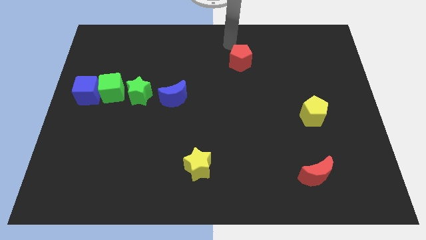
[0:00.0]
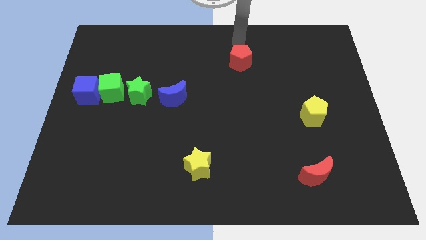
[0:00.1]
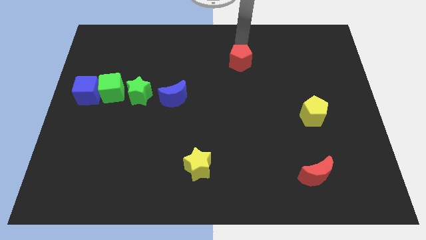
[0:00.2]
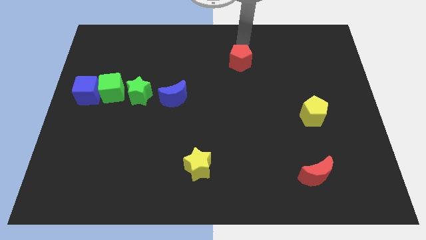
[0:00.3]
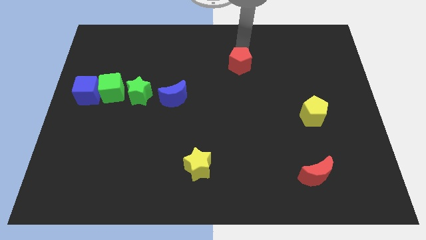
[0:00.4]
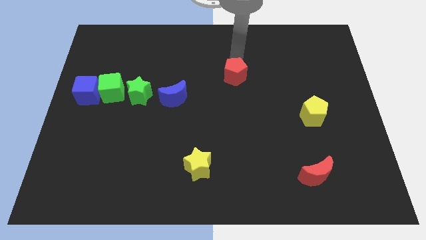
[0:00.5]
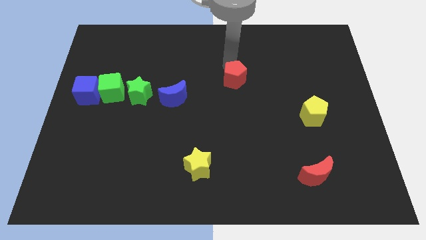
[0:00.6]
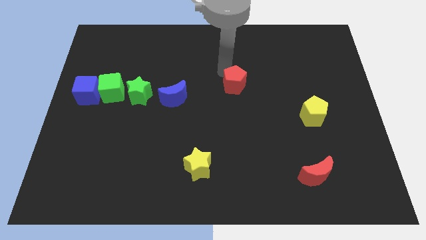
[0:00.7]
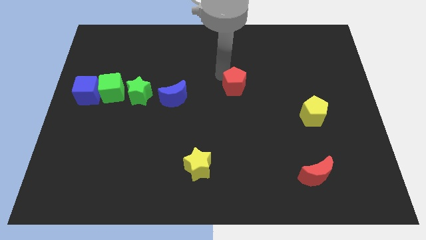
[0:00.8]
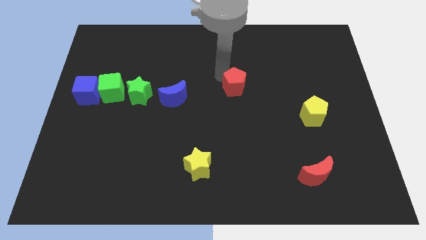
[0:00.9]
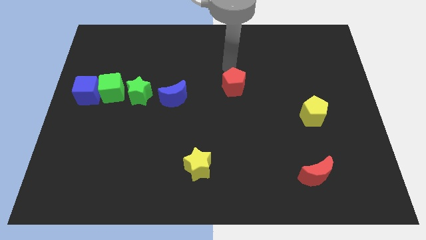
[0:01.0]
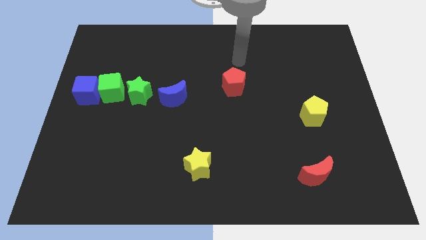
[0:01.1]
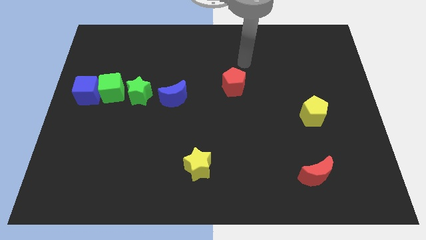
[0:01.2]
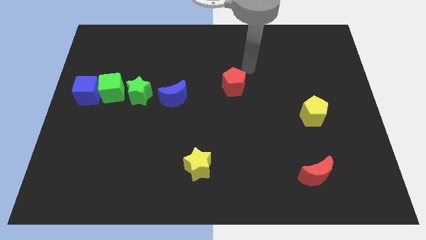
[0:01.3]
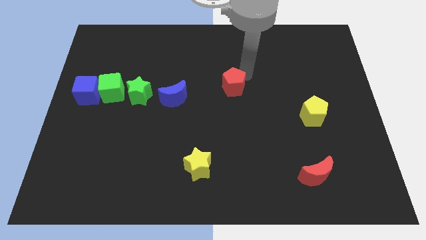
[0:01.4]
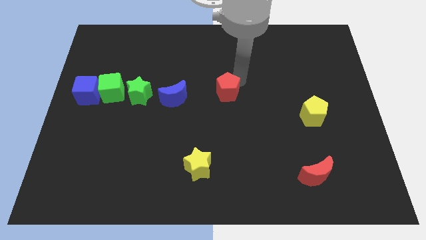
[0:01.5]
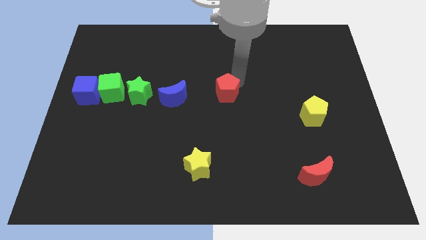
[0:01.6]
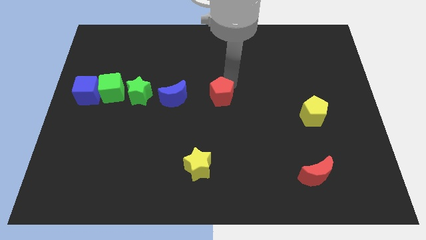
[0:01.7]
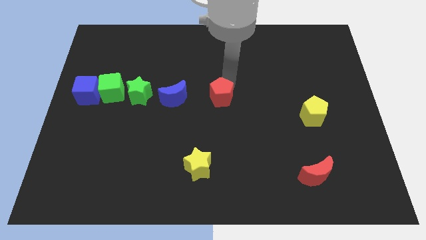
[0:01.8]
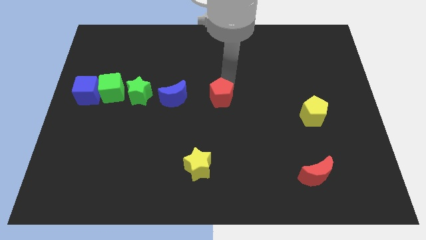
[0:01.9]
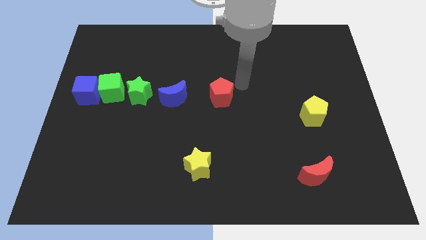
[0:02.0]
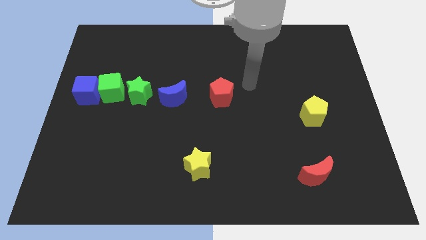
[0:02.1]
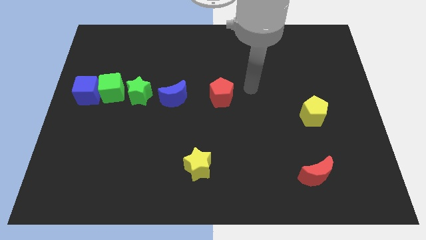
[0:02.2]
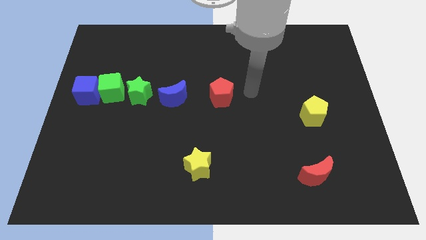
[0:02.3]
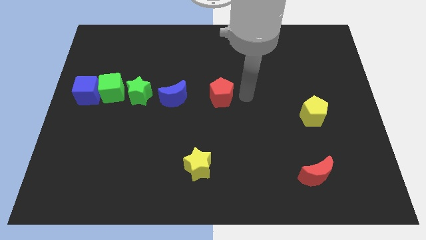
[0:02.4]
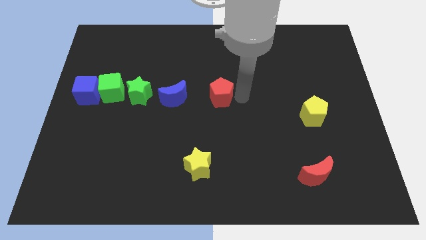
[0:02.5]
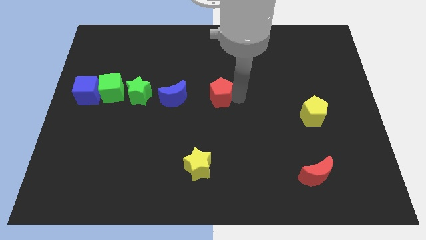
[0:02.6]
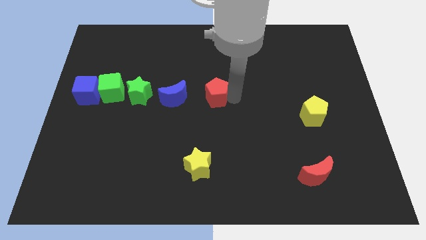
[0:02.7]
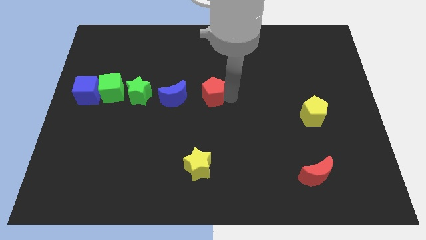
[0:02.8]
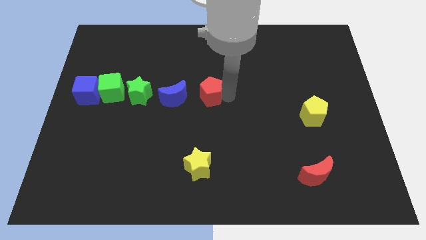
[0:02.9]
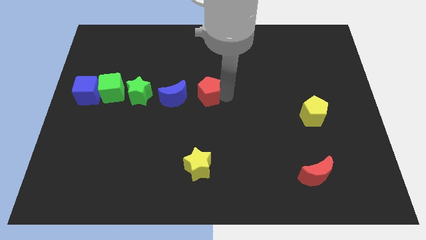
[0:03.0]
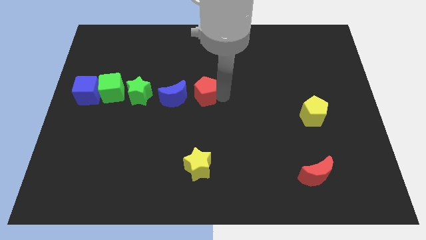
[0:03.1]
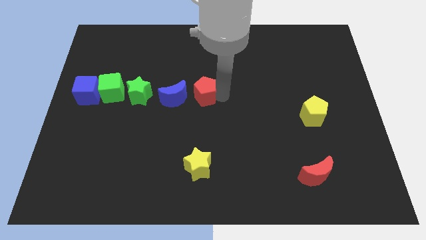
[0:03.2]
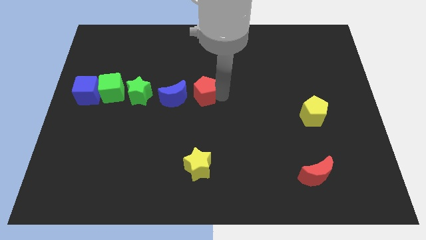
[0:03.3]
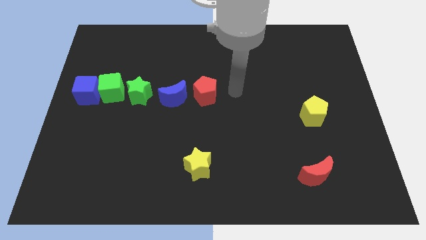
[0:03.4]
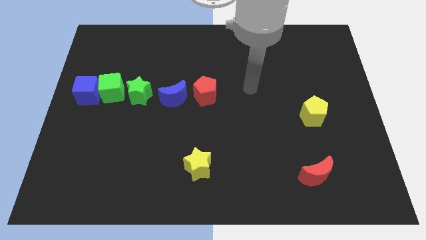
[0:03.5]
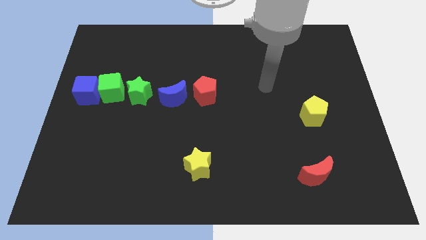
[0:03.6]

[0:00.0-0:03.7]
drag red pentagon to the center

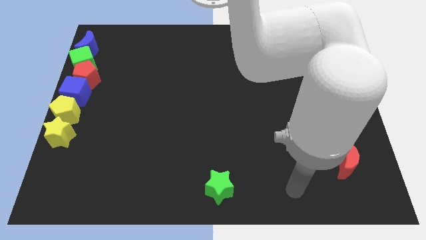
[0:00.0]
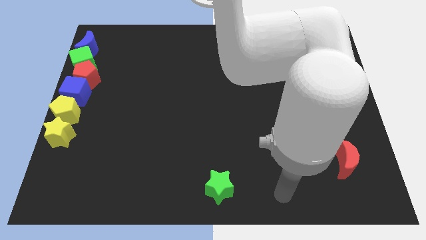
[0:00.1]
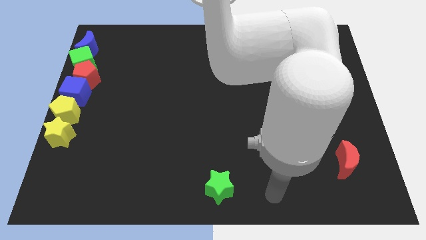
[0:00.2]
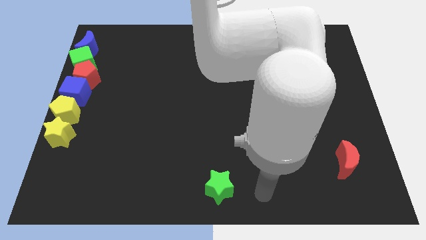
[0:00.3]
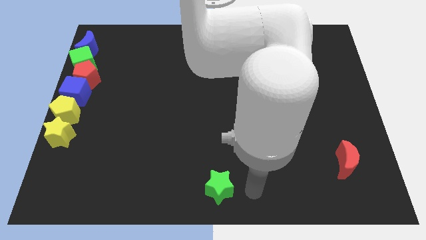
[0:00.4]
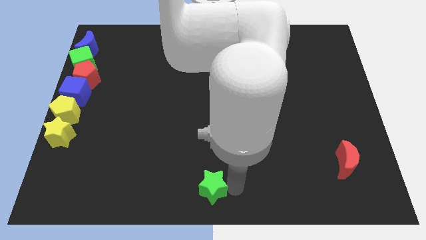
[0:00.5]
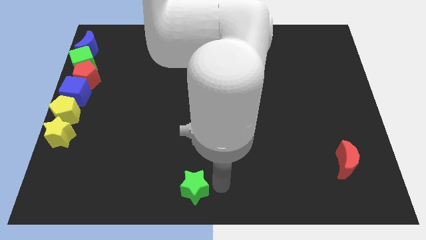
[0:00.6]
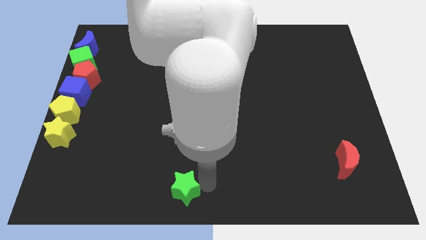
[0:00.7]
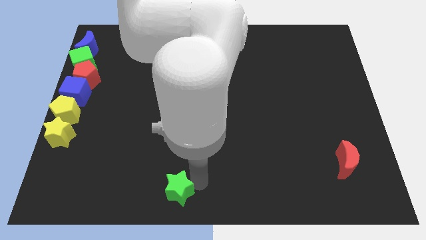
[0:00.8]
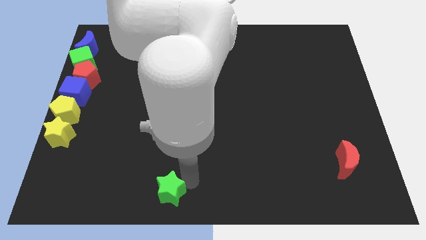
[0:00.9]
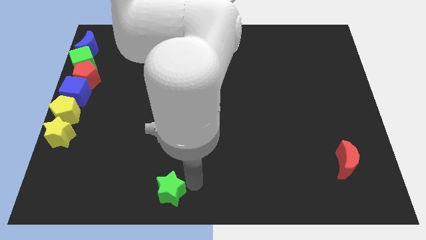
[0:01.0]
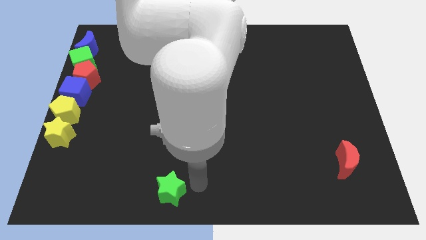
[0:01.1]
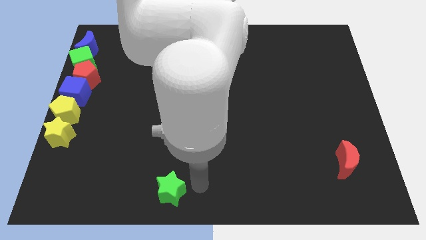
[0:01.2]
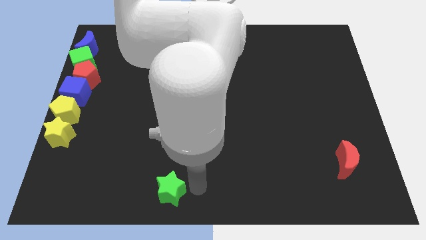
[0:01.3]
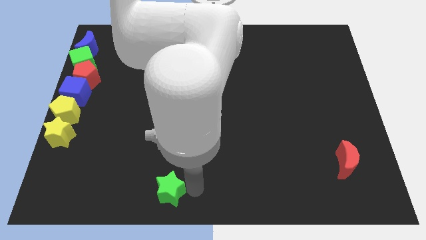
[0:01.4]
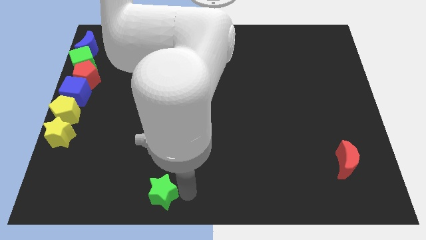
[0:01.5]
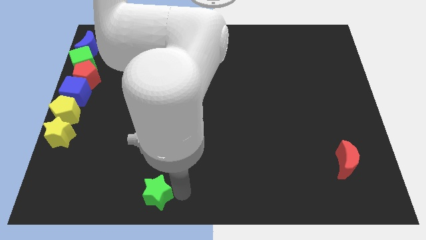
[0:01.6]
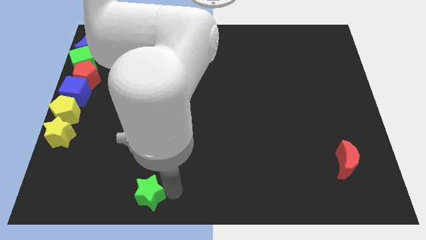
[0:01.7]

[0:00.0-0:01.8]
push the green star slightly to the left

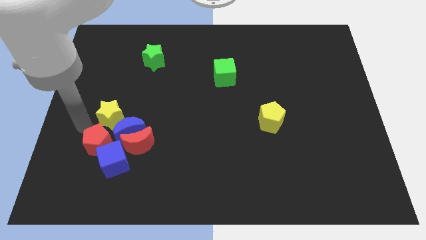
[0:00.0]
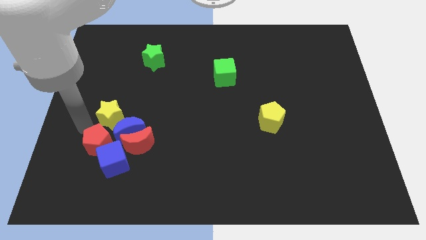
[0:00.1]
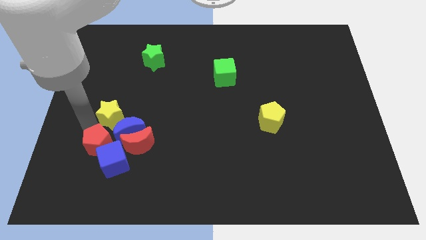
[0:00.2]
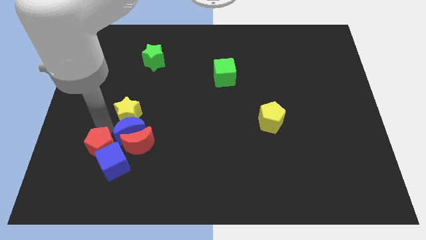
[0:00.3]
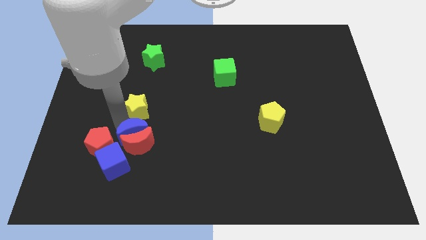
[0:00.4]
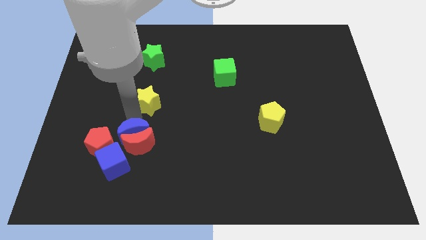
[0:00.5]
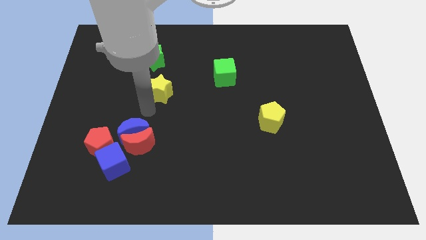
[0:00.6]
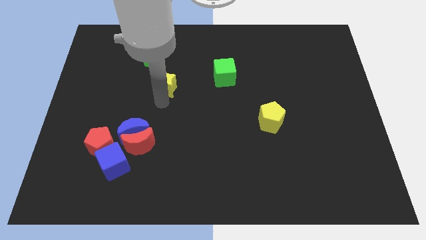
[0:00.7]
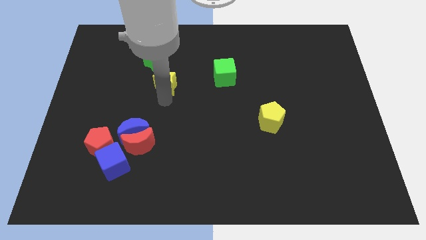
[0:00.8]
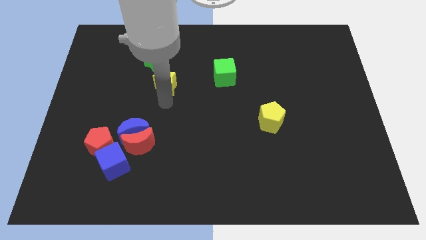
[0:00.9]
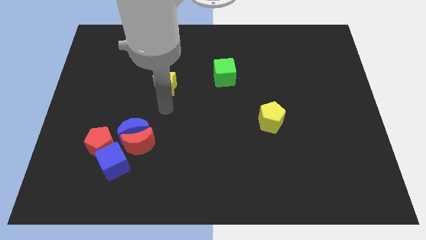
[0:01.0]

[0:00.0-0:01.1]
move the yellow star to the horizontal left of the green cube

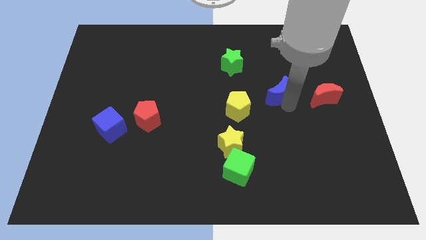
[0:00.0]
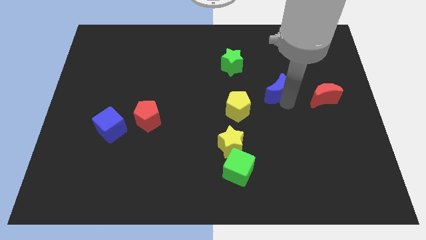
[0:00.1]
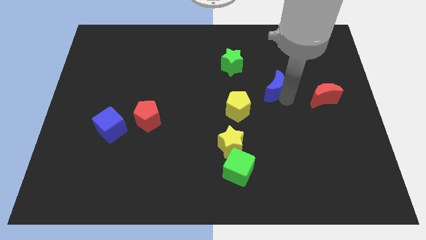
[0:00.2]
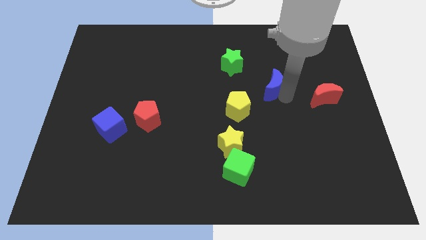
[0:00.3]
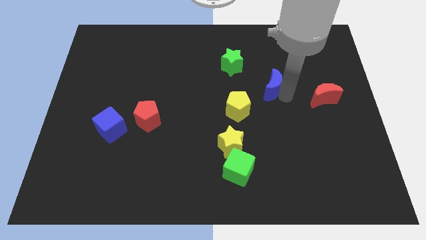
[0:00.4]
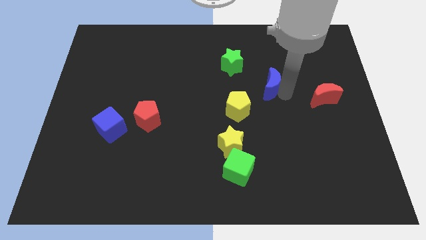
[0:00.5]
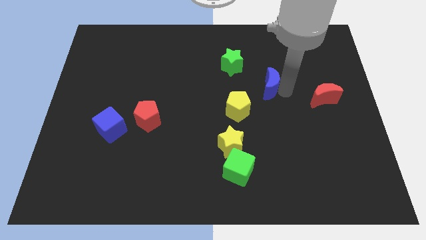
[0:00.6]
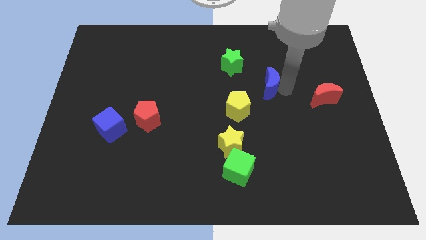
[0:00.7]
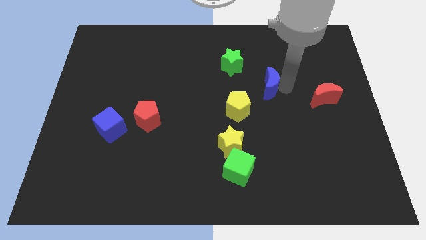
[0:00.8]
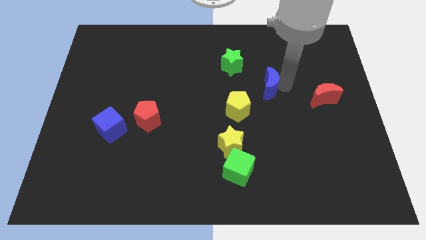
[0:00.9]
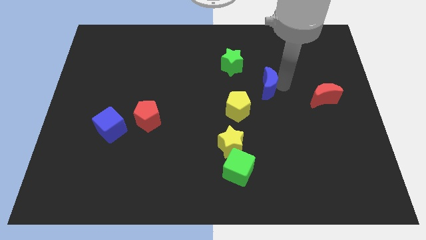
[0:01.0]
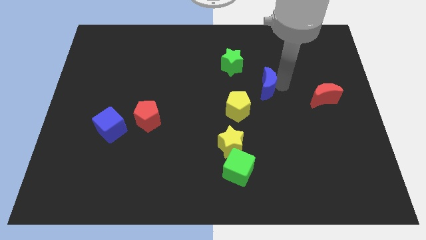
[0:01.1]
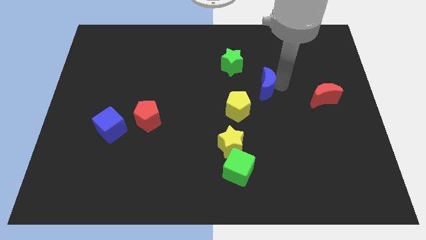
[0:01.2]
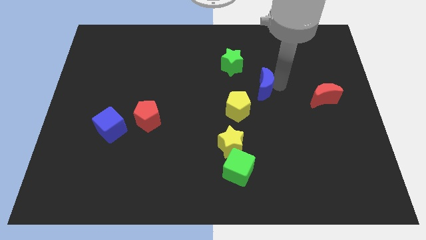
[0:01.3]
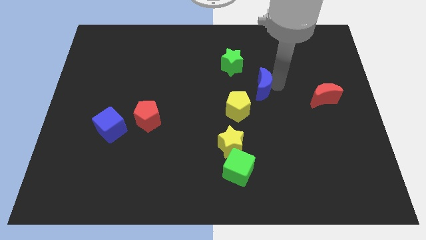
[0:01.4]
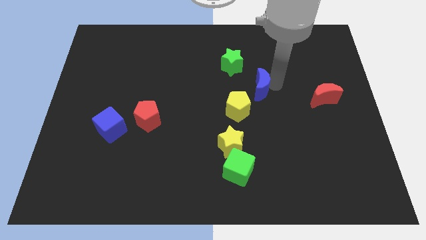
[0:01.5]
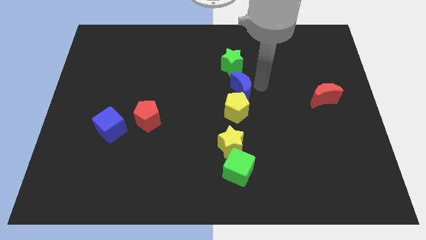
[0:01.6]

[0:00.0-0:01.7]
move the blue moon into the yellow pentagon

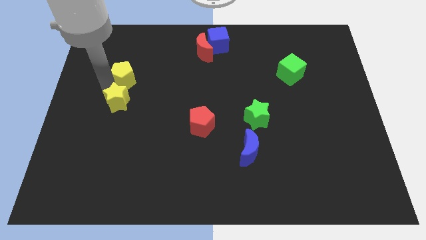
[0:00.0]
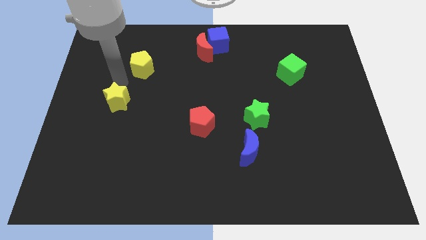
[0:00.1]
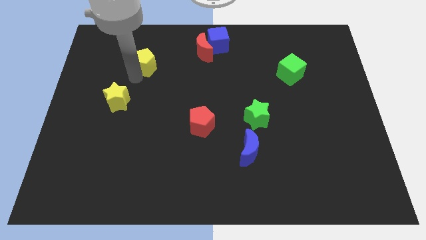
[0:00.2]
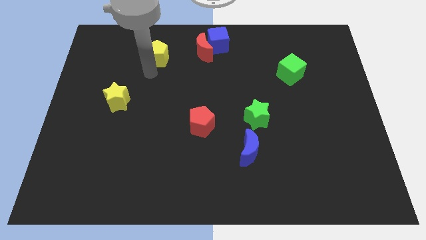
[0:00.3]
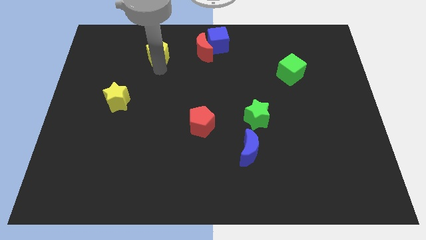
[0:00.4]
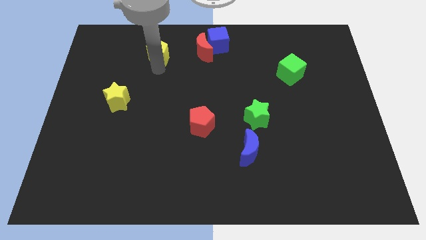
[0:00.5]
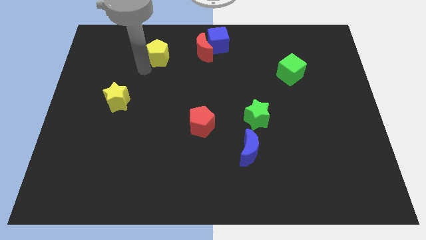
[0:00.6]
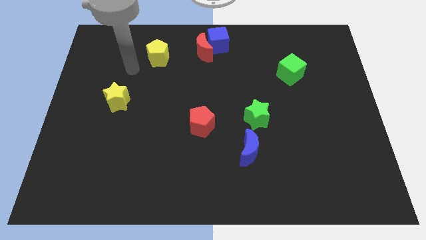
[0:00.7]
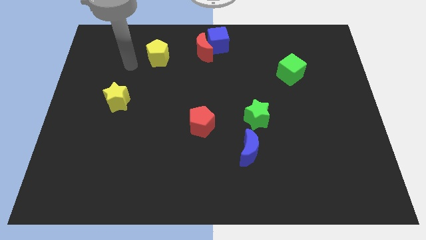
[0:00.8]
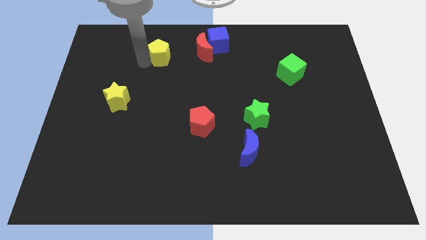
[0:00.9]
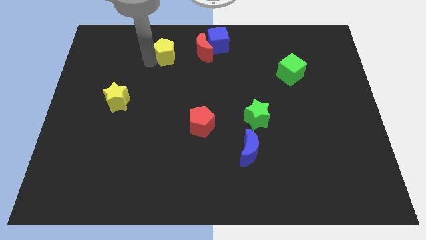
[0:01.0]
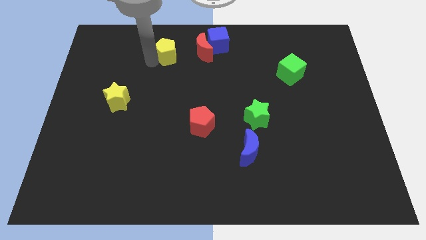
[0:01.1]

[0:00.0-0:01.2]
push the yellow pentagon to the red crescent
